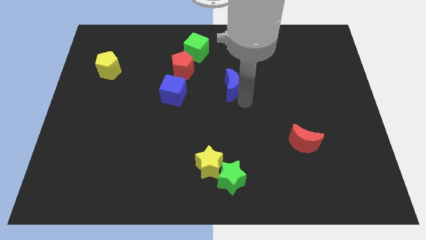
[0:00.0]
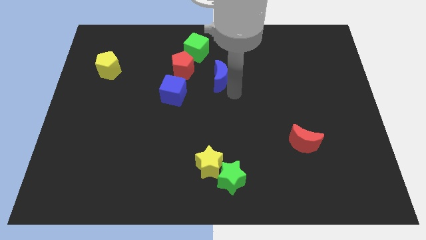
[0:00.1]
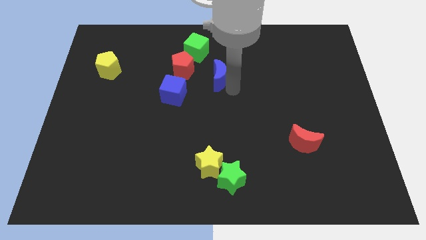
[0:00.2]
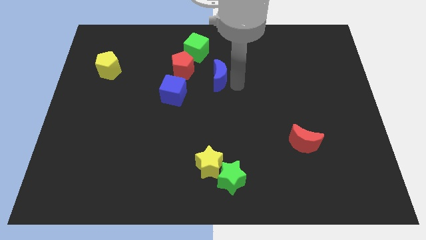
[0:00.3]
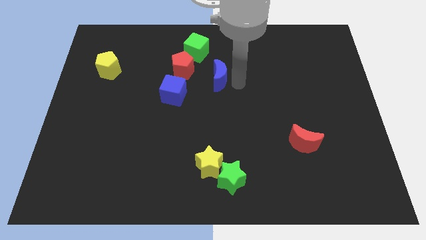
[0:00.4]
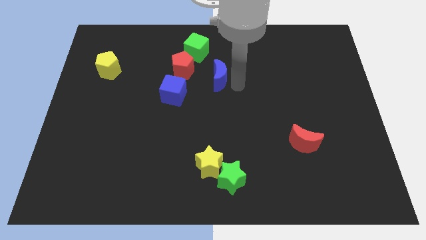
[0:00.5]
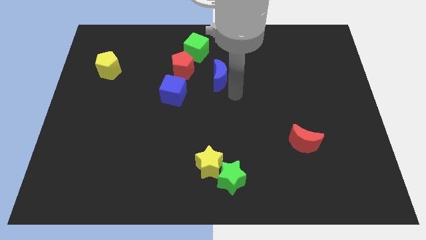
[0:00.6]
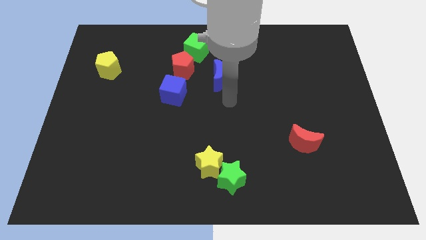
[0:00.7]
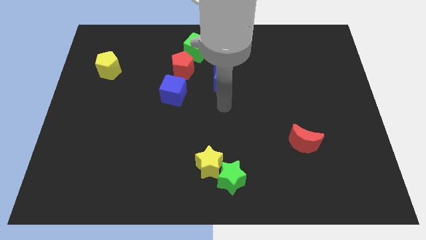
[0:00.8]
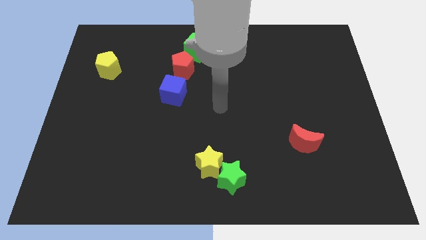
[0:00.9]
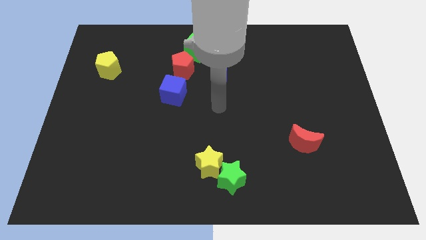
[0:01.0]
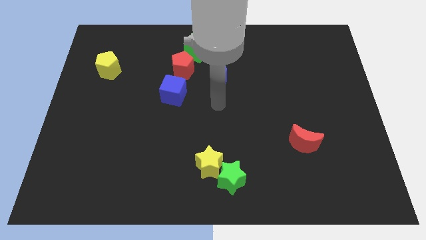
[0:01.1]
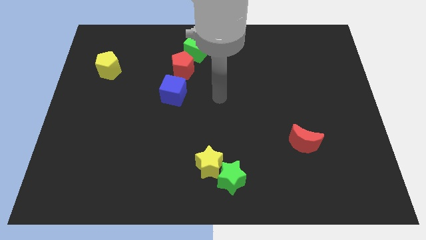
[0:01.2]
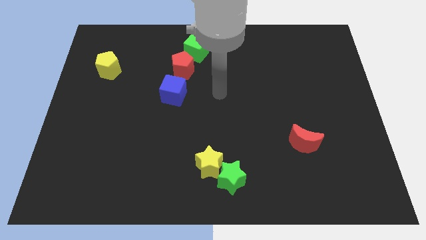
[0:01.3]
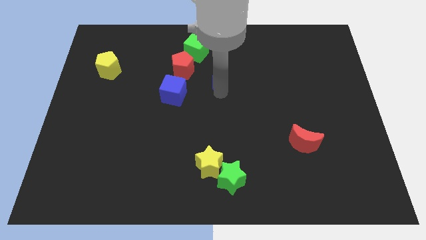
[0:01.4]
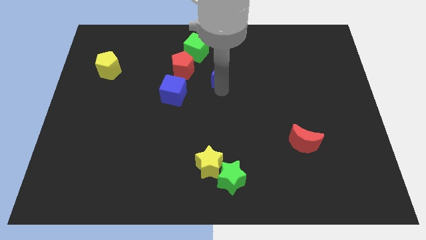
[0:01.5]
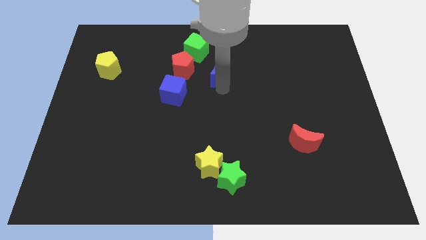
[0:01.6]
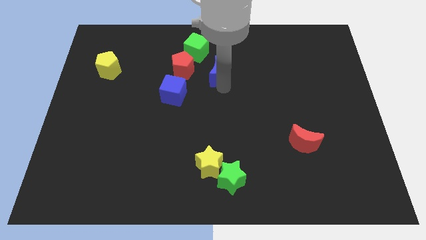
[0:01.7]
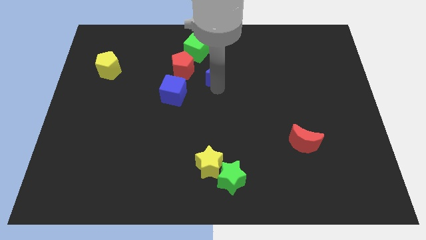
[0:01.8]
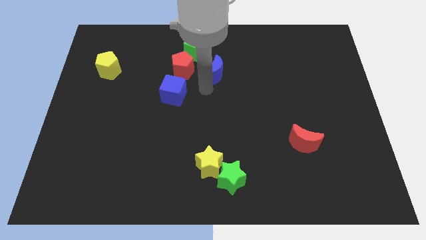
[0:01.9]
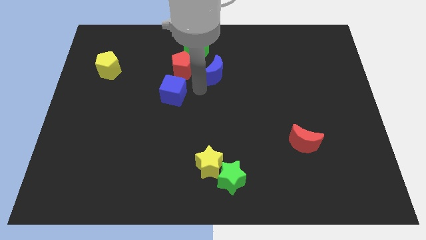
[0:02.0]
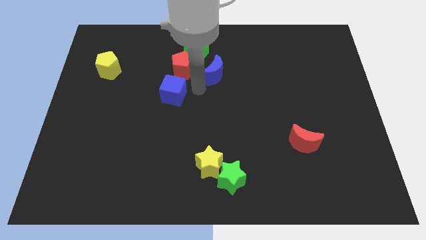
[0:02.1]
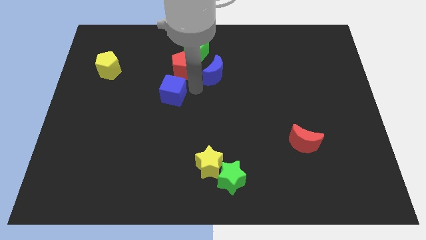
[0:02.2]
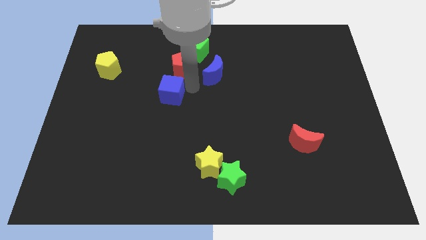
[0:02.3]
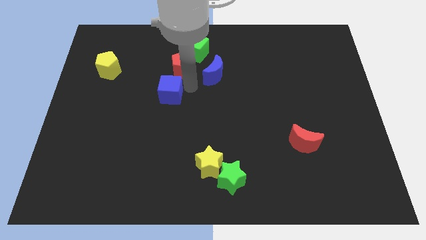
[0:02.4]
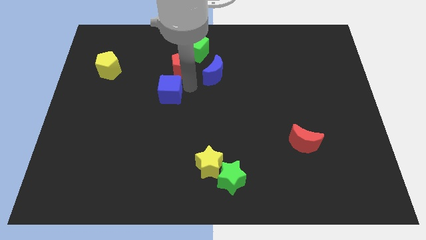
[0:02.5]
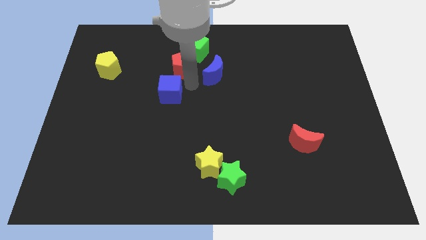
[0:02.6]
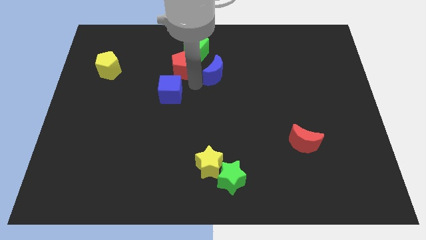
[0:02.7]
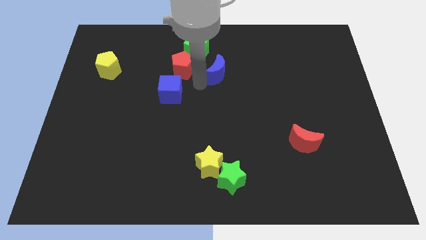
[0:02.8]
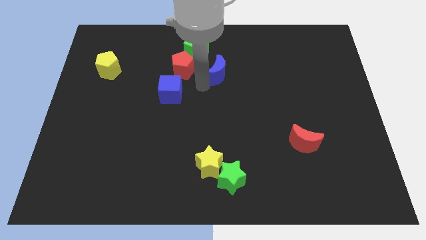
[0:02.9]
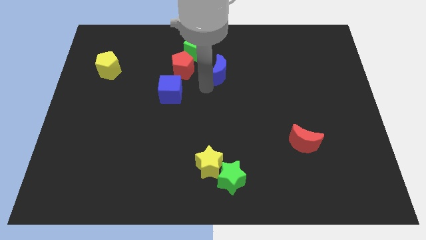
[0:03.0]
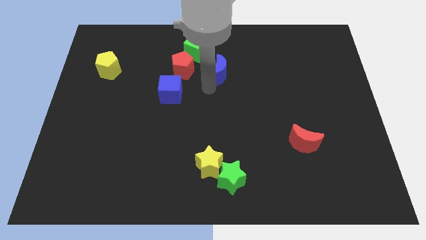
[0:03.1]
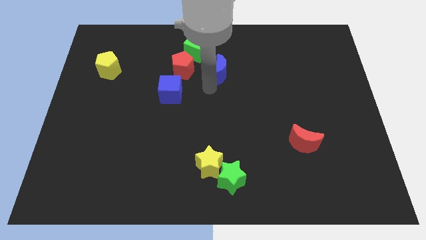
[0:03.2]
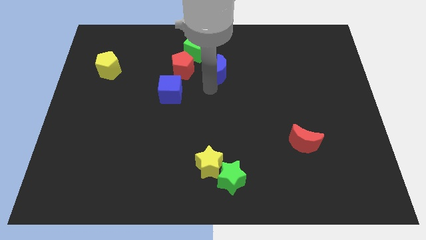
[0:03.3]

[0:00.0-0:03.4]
adjust both the blue blocks diagonal to each other

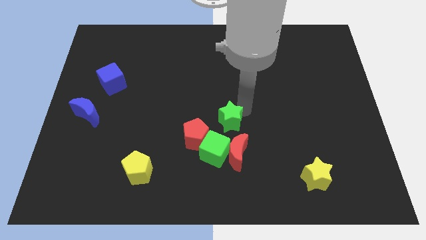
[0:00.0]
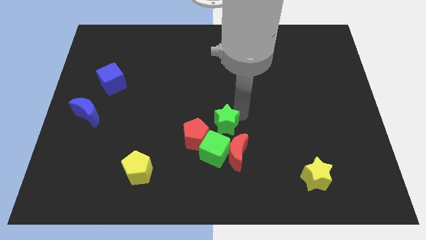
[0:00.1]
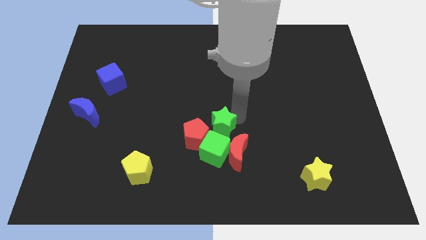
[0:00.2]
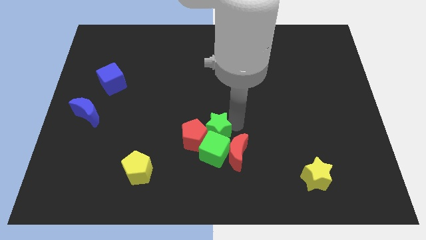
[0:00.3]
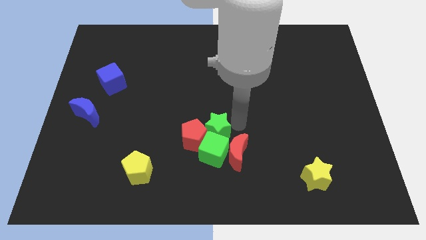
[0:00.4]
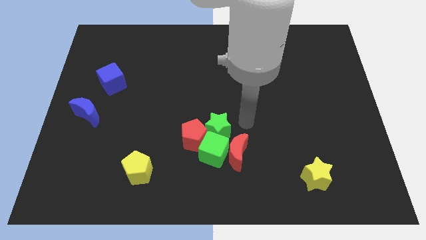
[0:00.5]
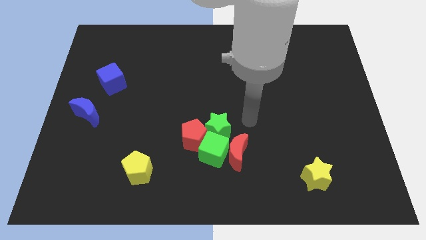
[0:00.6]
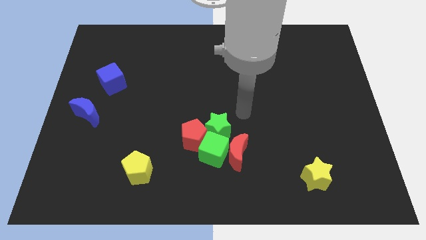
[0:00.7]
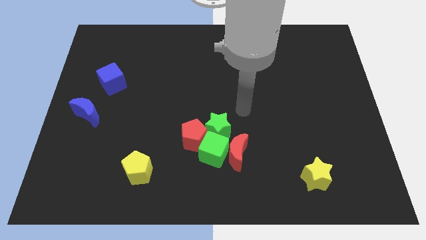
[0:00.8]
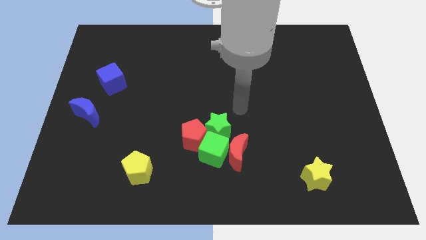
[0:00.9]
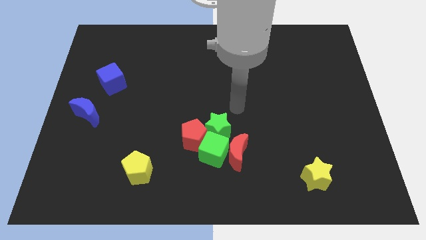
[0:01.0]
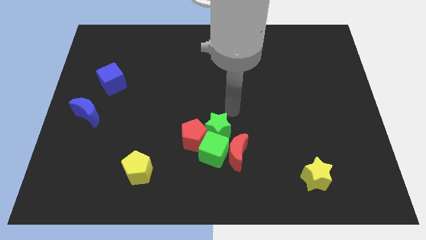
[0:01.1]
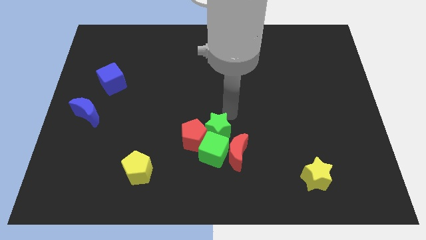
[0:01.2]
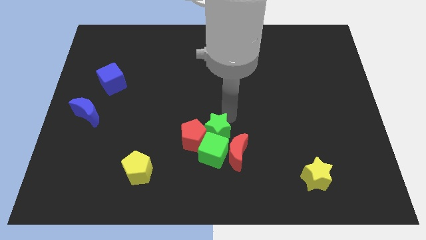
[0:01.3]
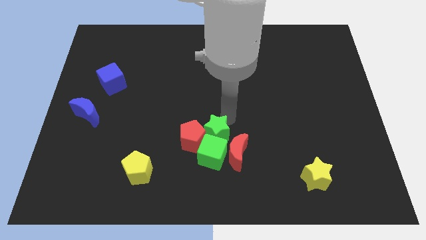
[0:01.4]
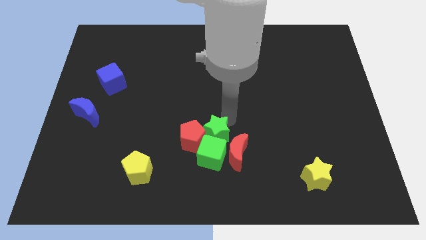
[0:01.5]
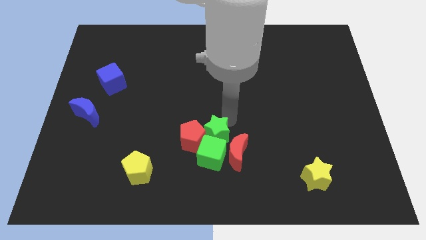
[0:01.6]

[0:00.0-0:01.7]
push green star into green cube

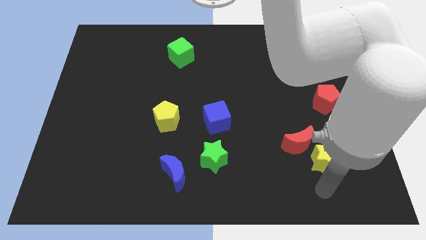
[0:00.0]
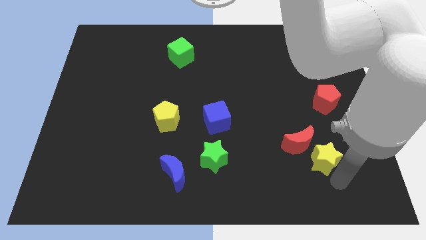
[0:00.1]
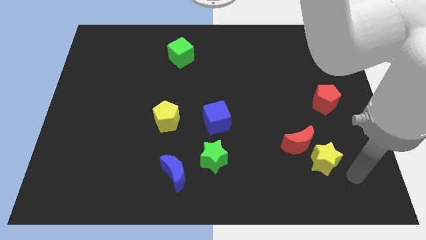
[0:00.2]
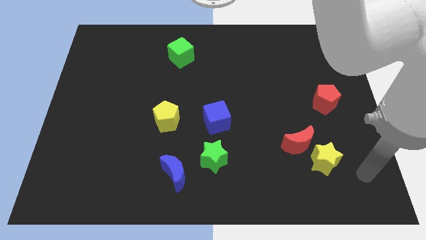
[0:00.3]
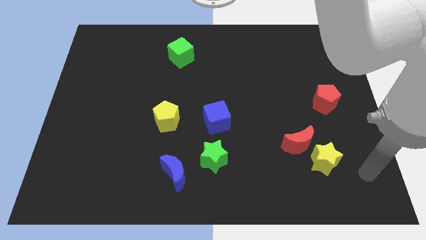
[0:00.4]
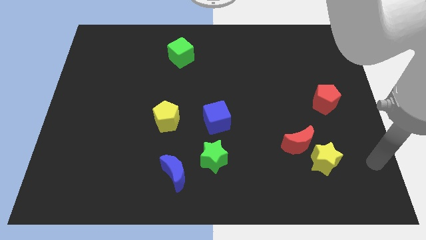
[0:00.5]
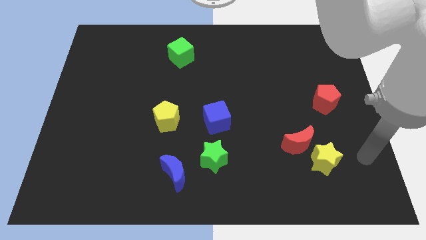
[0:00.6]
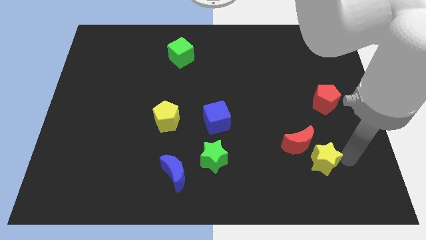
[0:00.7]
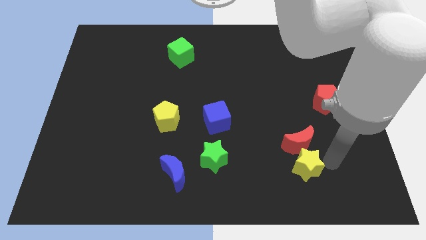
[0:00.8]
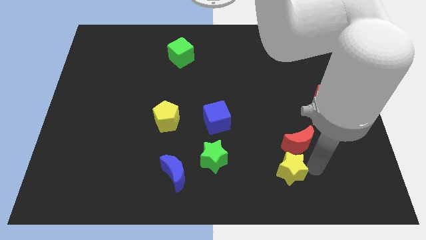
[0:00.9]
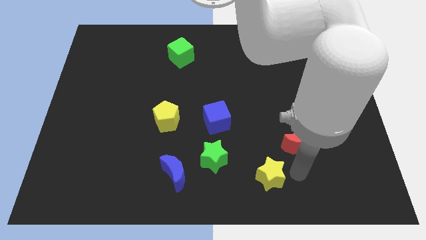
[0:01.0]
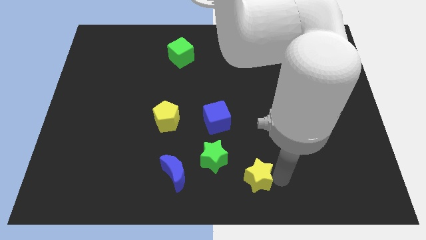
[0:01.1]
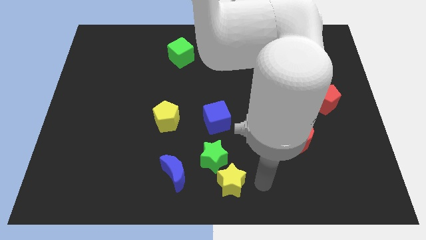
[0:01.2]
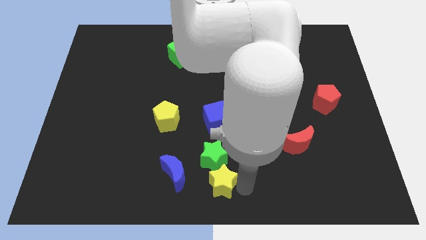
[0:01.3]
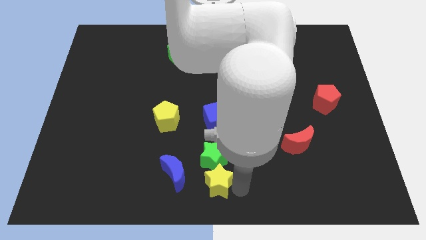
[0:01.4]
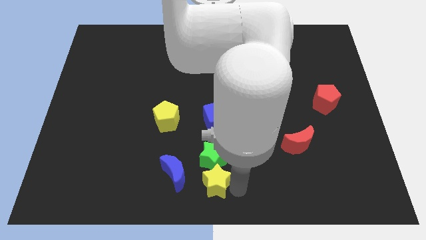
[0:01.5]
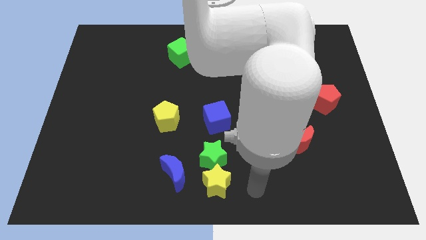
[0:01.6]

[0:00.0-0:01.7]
move the yellow star below green star

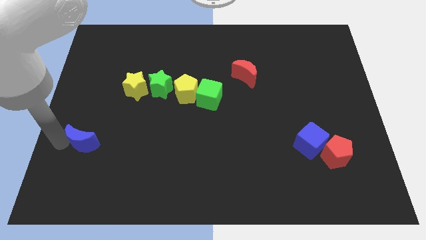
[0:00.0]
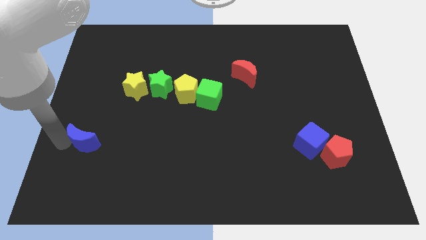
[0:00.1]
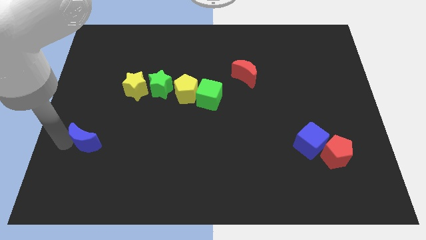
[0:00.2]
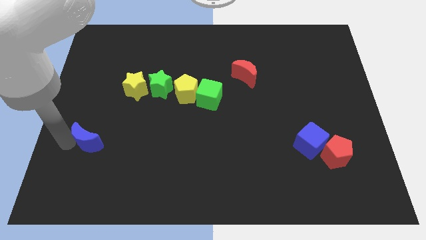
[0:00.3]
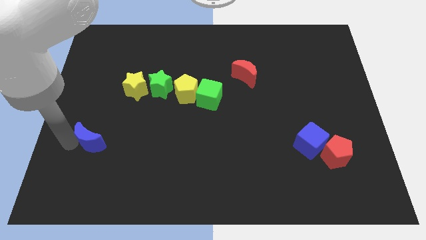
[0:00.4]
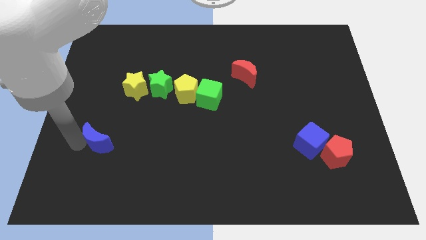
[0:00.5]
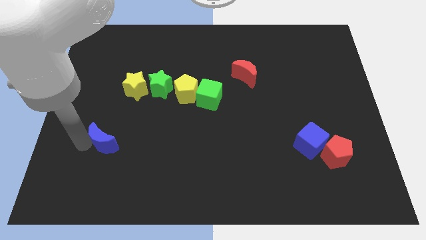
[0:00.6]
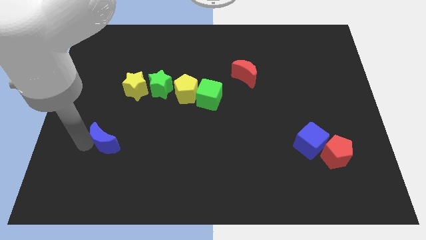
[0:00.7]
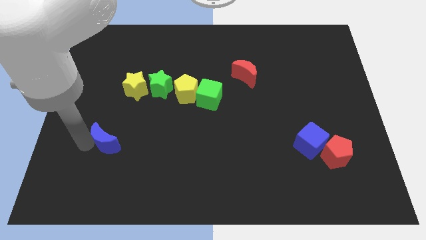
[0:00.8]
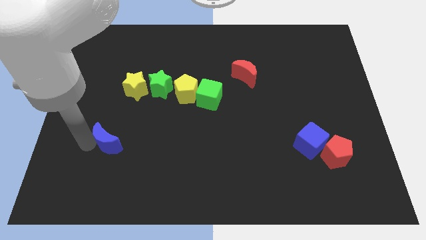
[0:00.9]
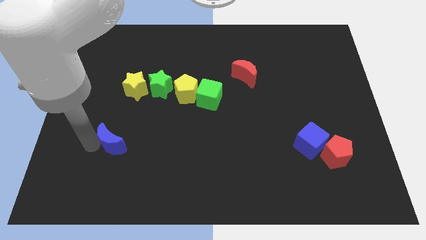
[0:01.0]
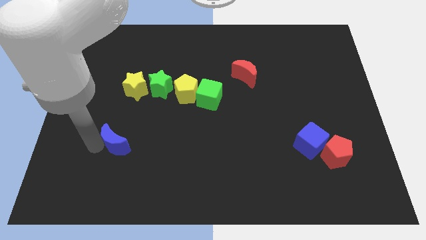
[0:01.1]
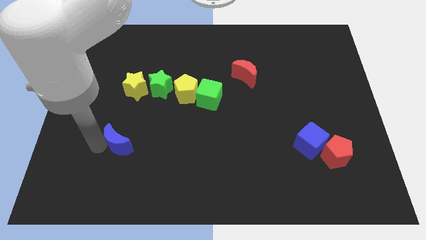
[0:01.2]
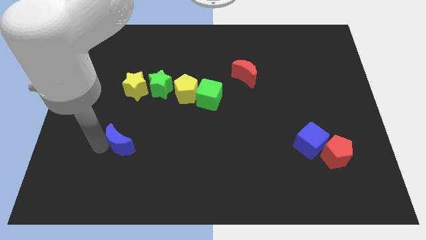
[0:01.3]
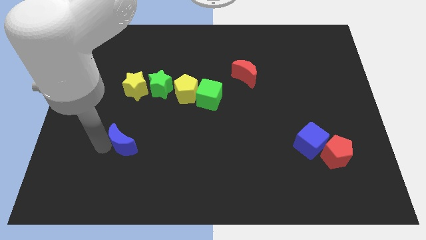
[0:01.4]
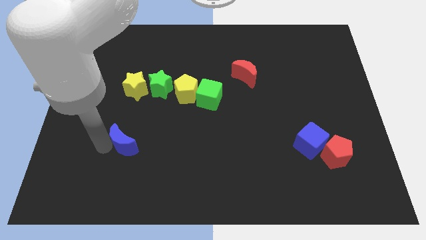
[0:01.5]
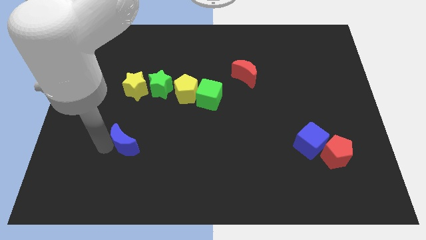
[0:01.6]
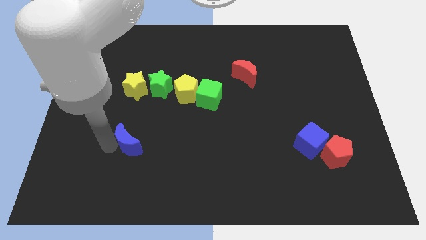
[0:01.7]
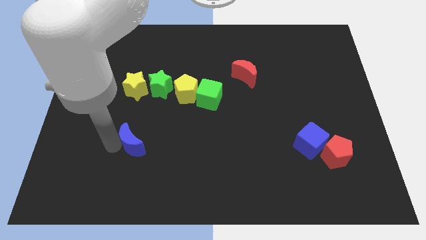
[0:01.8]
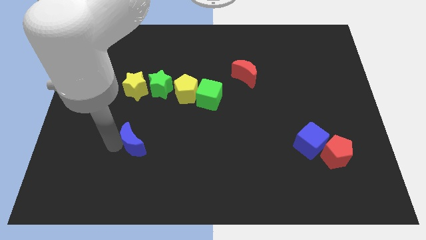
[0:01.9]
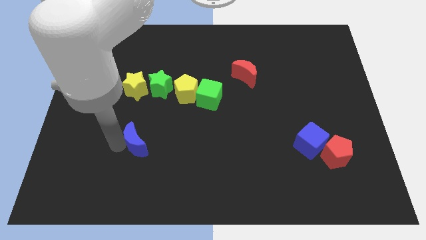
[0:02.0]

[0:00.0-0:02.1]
move the blue crescent to the right side of the table
